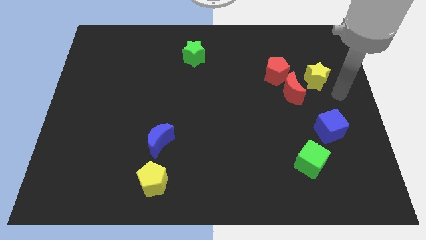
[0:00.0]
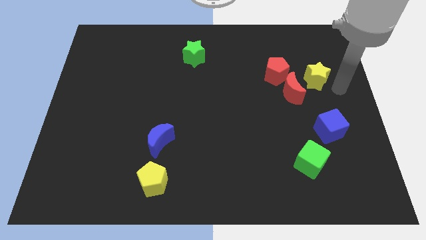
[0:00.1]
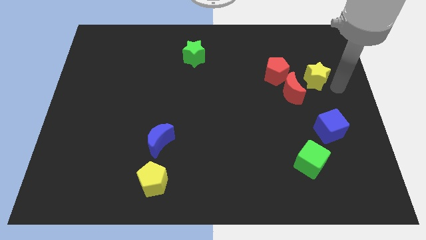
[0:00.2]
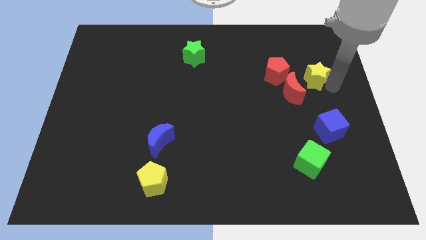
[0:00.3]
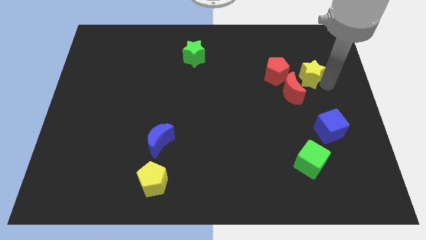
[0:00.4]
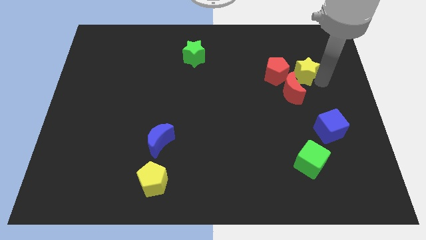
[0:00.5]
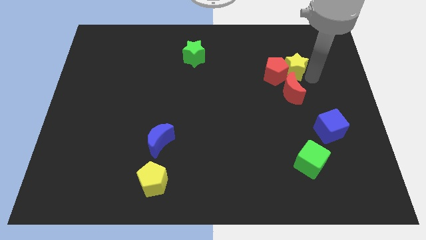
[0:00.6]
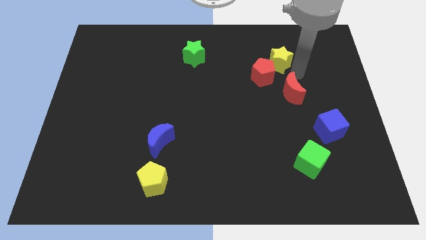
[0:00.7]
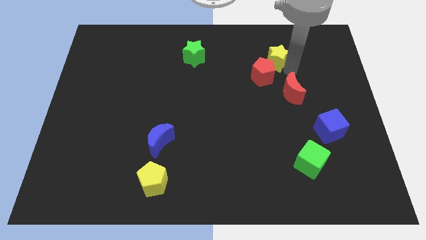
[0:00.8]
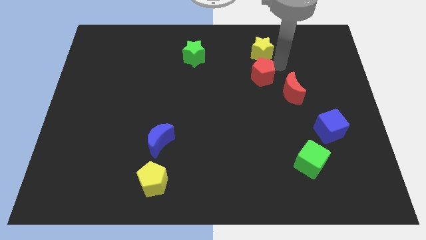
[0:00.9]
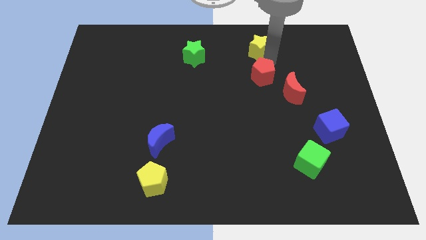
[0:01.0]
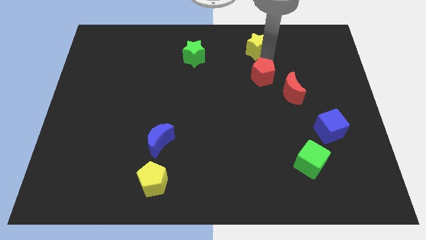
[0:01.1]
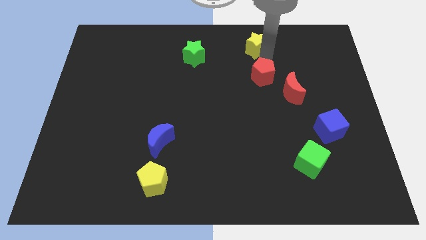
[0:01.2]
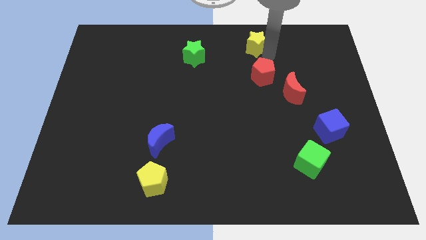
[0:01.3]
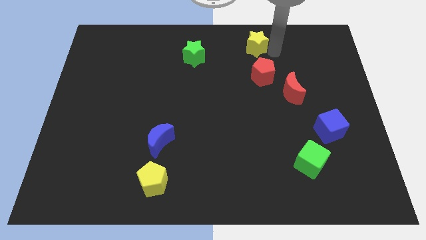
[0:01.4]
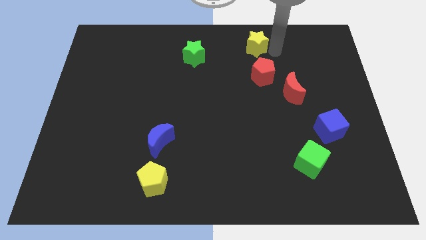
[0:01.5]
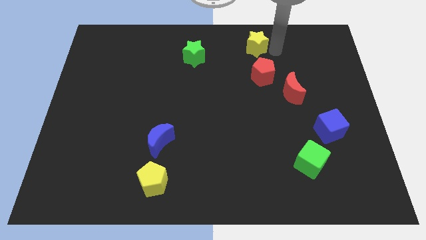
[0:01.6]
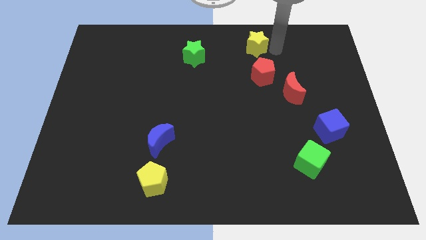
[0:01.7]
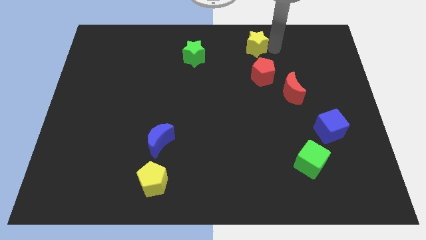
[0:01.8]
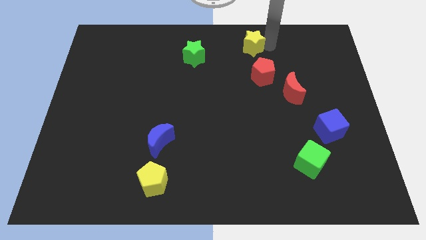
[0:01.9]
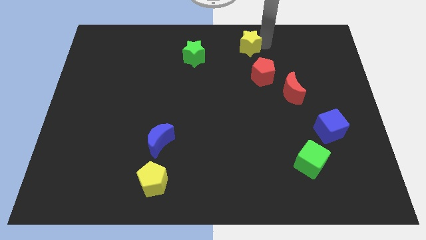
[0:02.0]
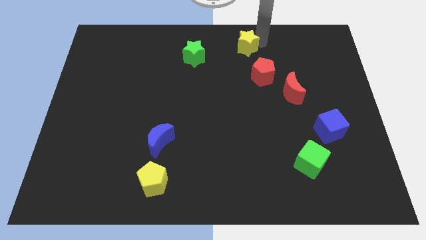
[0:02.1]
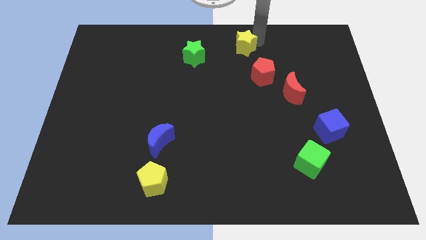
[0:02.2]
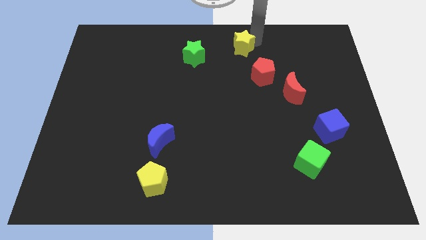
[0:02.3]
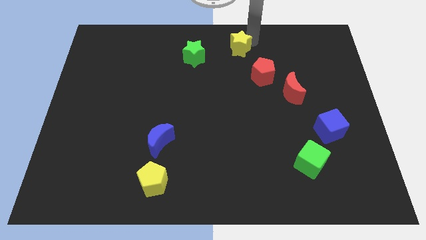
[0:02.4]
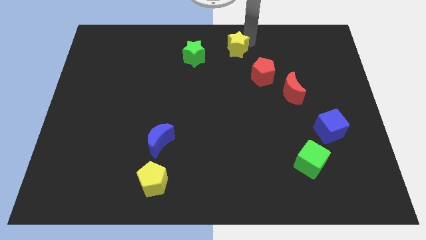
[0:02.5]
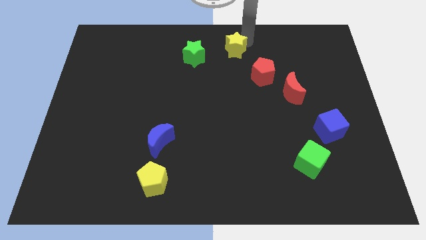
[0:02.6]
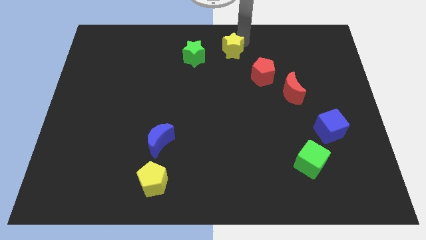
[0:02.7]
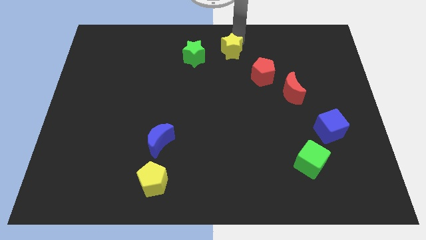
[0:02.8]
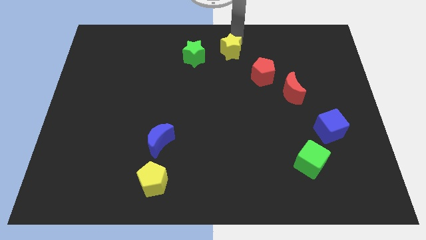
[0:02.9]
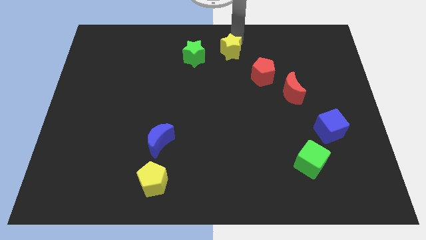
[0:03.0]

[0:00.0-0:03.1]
move the yellow star to the right of the green star

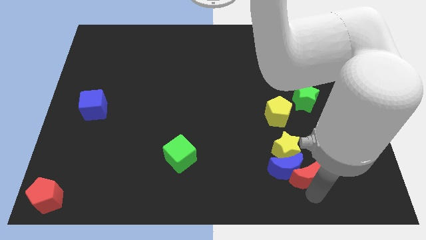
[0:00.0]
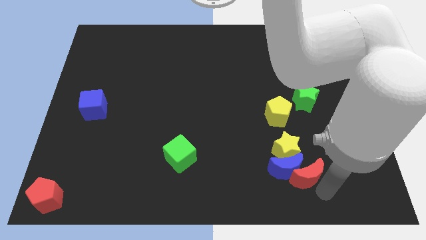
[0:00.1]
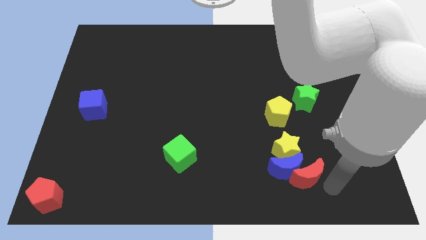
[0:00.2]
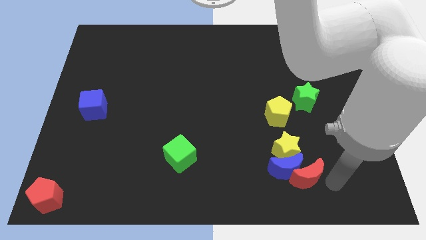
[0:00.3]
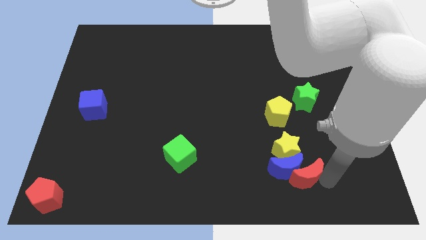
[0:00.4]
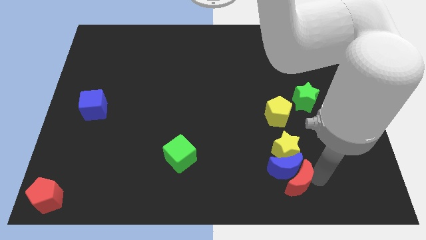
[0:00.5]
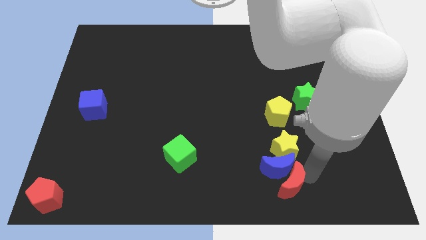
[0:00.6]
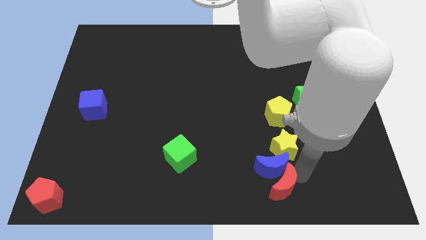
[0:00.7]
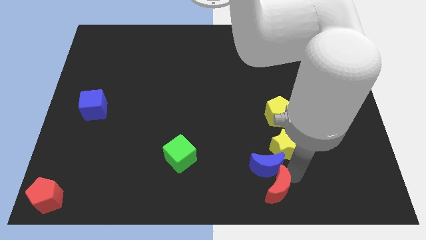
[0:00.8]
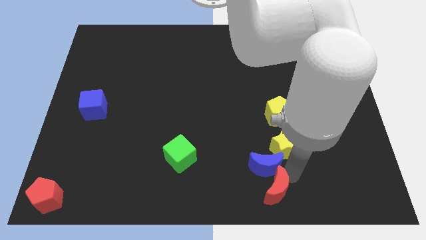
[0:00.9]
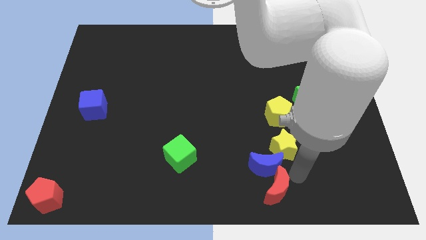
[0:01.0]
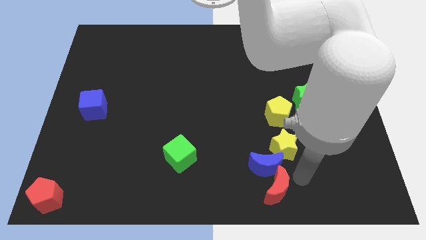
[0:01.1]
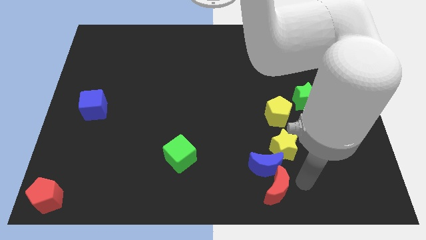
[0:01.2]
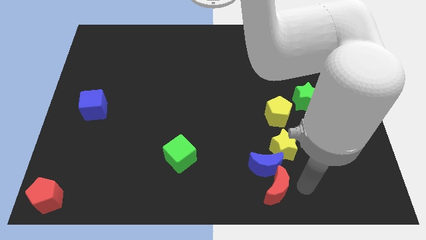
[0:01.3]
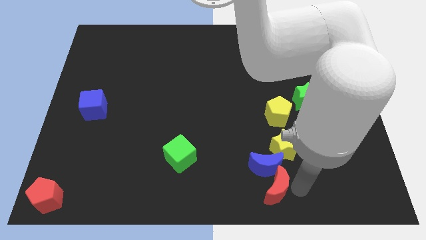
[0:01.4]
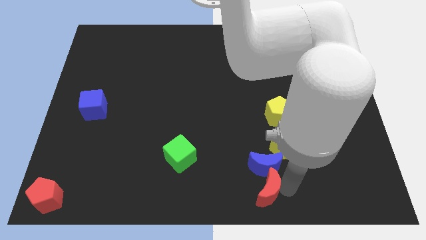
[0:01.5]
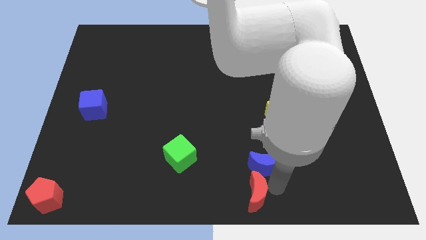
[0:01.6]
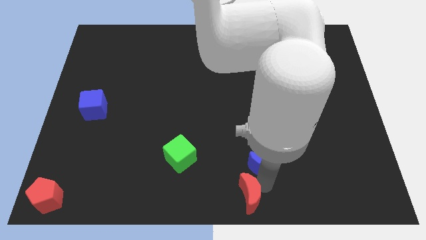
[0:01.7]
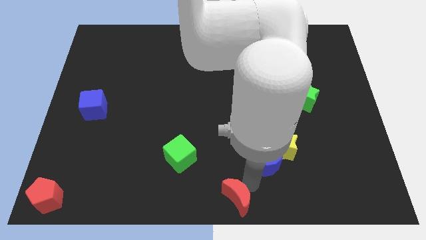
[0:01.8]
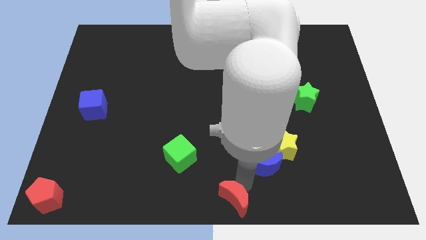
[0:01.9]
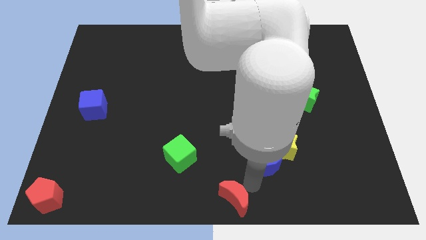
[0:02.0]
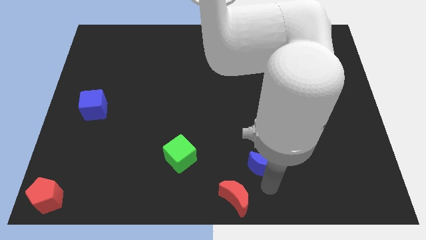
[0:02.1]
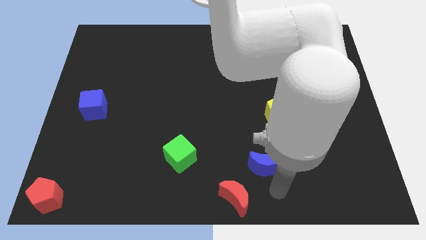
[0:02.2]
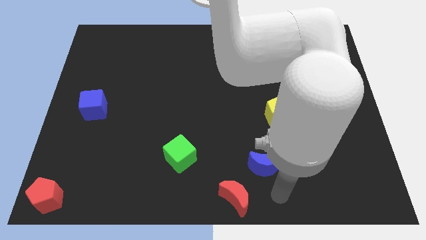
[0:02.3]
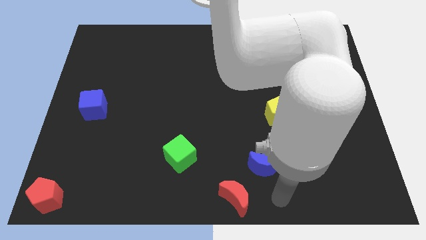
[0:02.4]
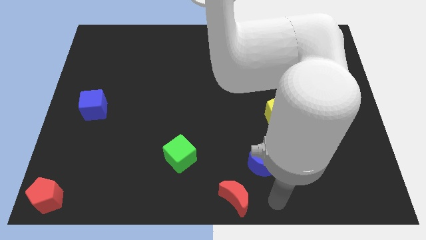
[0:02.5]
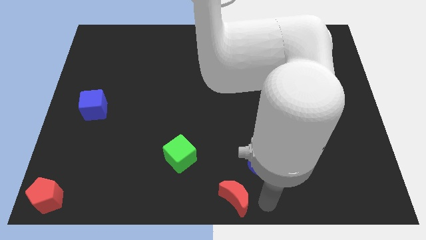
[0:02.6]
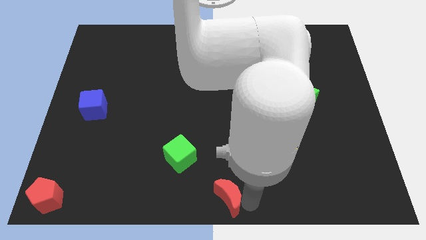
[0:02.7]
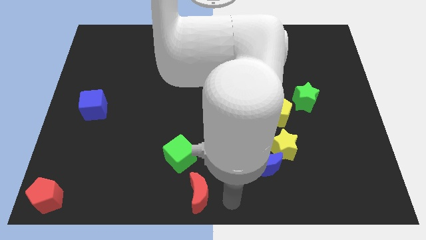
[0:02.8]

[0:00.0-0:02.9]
push the red crescent to the bottom center of the board

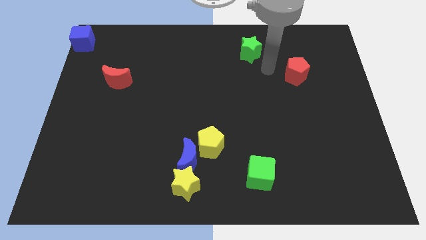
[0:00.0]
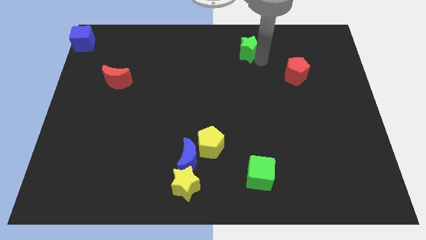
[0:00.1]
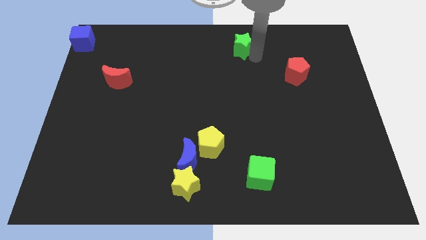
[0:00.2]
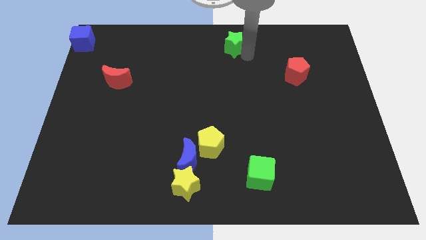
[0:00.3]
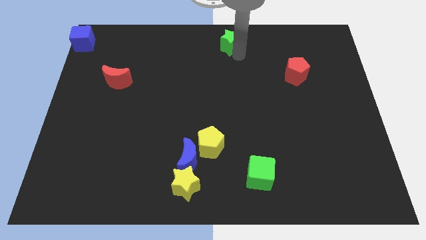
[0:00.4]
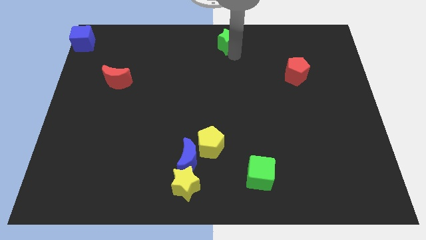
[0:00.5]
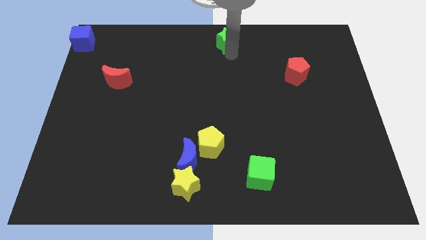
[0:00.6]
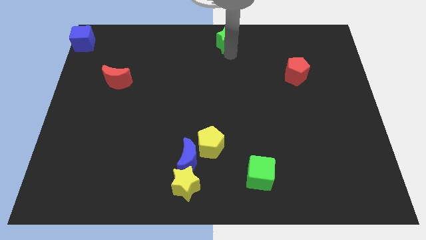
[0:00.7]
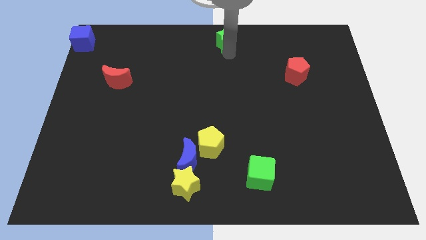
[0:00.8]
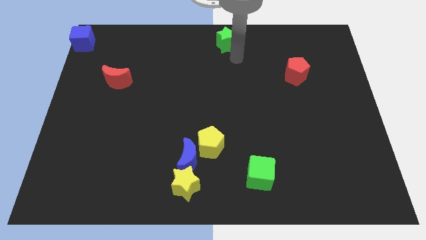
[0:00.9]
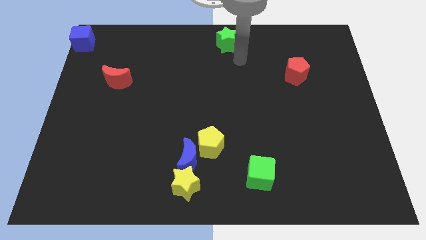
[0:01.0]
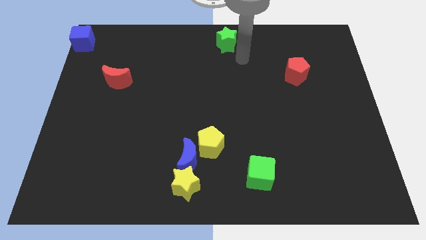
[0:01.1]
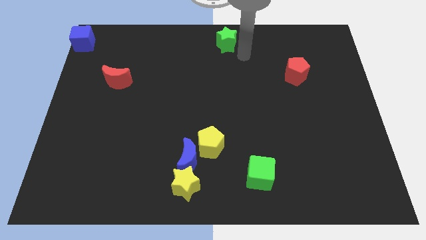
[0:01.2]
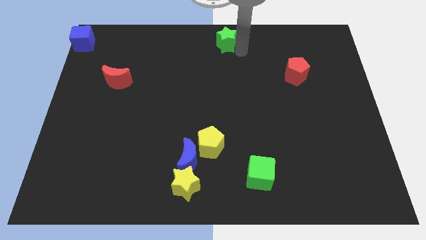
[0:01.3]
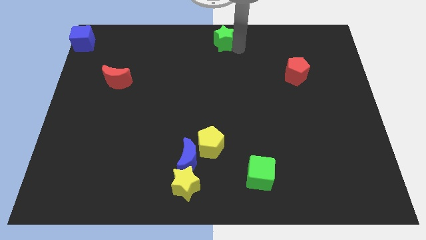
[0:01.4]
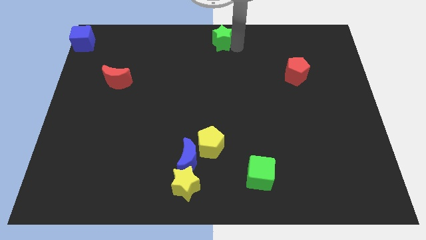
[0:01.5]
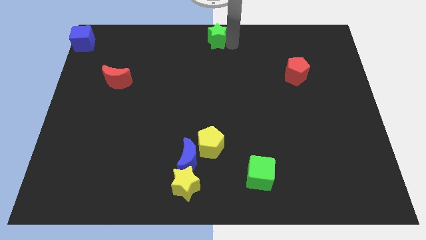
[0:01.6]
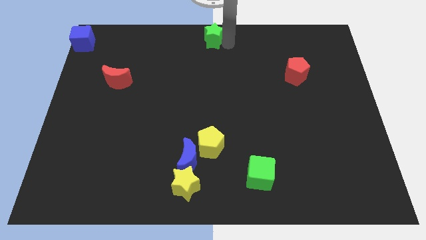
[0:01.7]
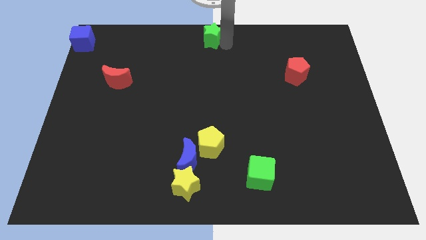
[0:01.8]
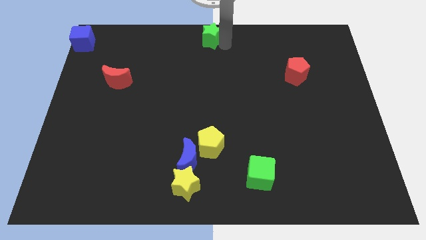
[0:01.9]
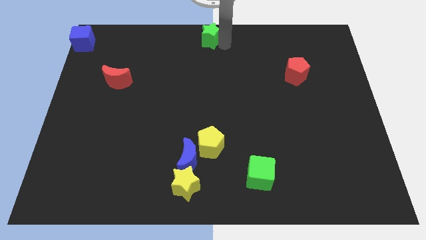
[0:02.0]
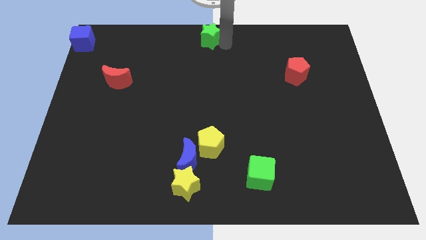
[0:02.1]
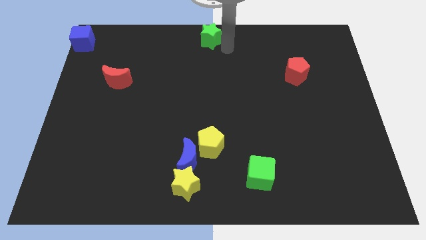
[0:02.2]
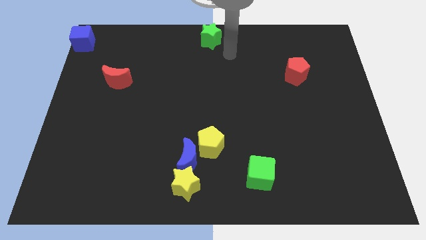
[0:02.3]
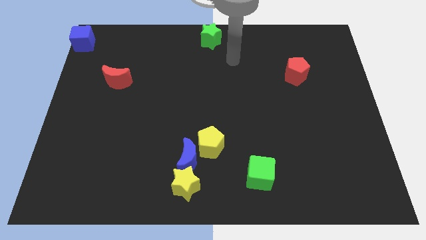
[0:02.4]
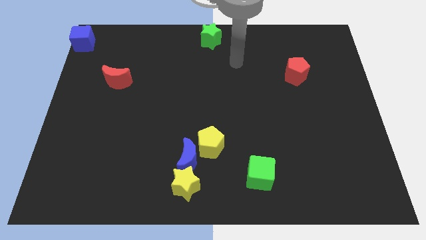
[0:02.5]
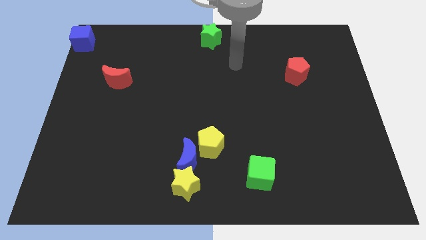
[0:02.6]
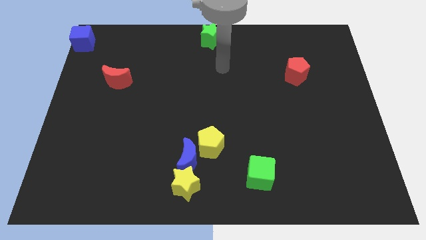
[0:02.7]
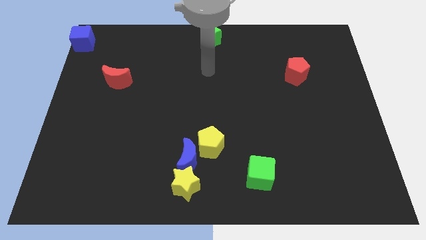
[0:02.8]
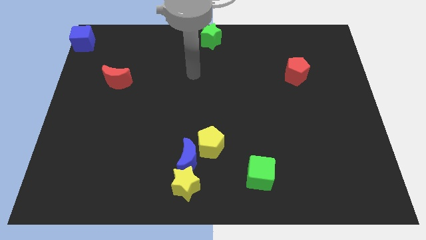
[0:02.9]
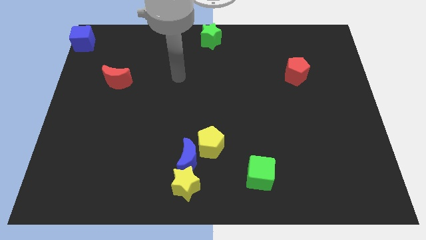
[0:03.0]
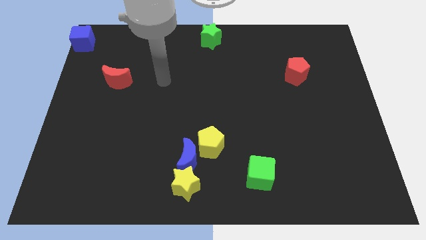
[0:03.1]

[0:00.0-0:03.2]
place the green star at the top center of the board
